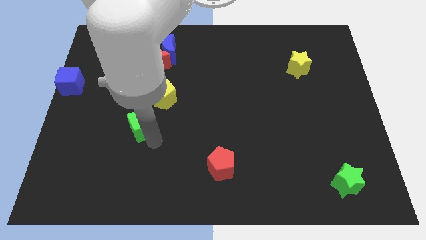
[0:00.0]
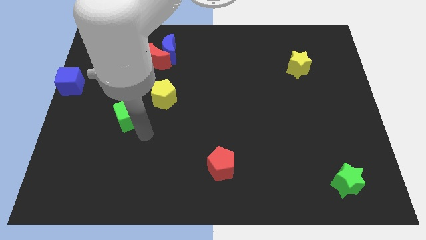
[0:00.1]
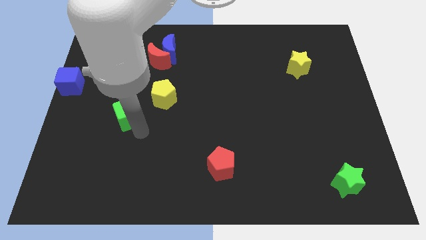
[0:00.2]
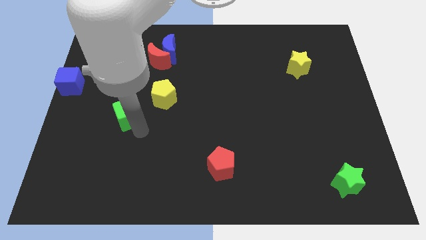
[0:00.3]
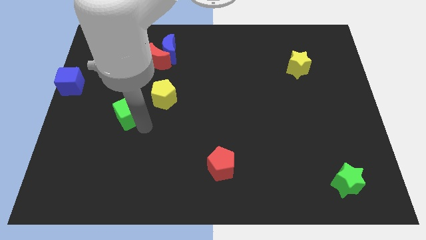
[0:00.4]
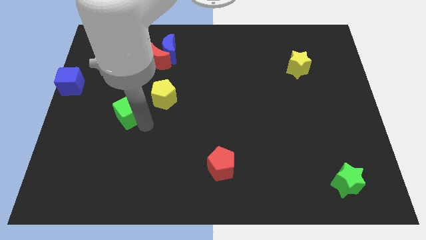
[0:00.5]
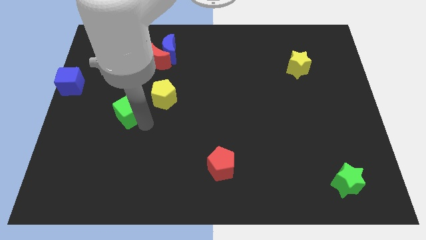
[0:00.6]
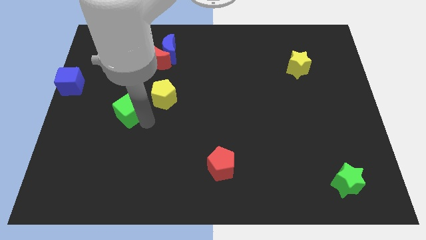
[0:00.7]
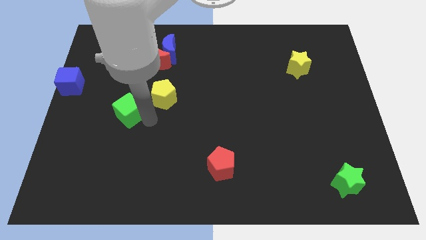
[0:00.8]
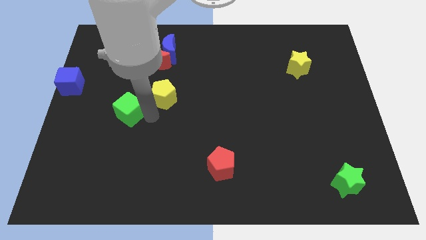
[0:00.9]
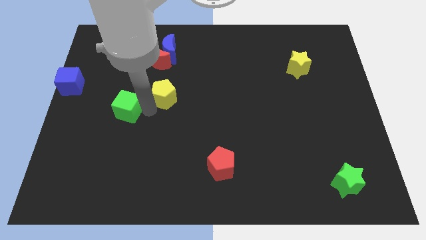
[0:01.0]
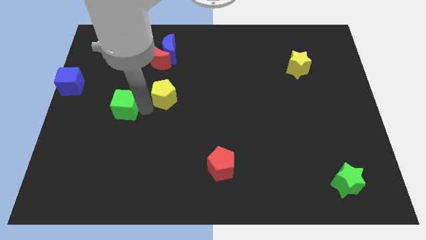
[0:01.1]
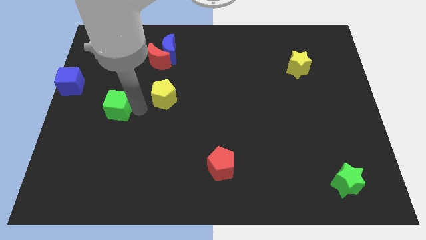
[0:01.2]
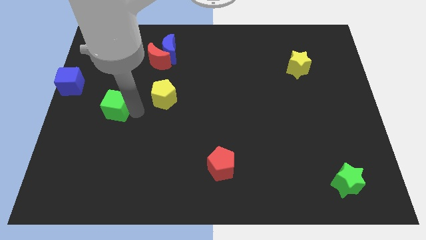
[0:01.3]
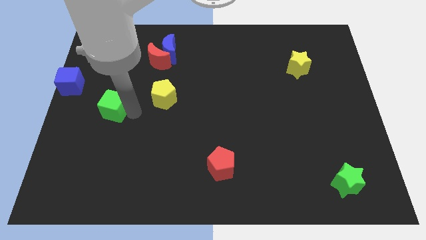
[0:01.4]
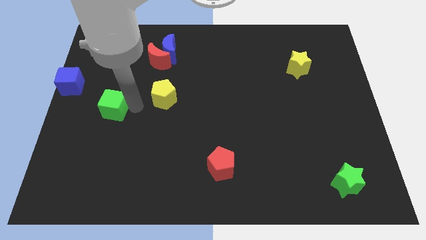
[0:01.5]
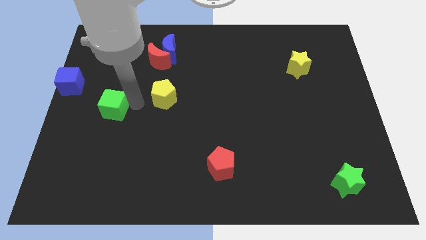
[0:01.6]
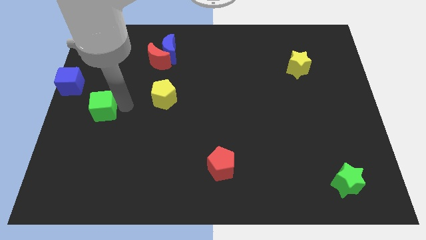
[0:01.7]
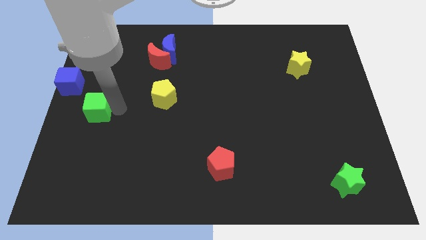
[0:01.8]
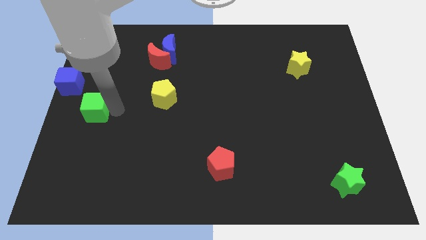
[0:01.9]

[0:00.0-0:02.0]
move green cube towards left

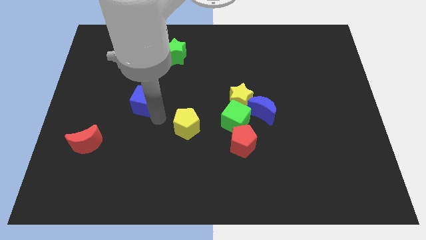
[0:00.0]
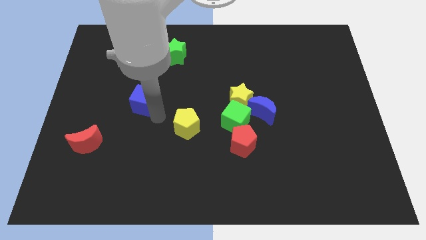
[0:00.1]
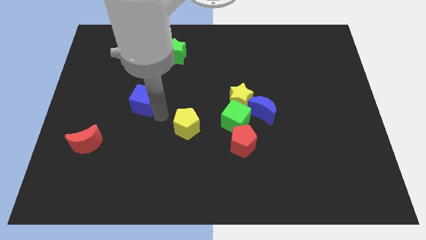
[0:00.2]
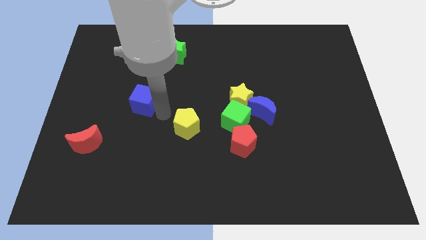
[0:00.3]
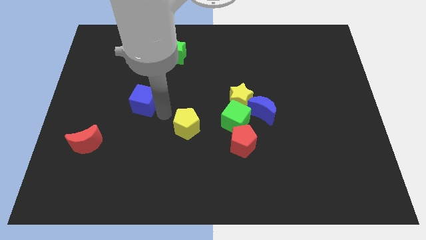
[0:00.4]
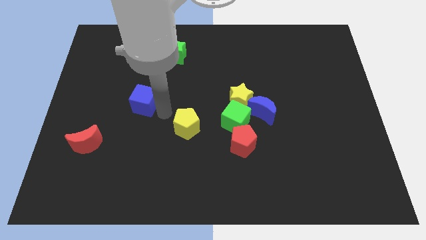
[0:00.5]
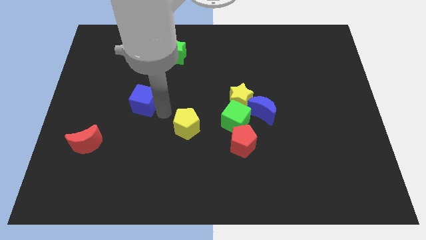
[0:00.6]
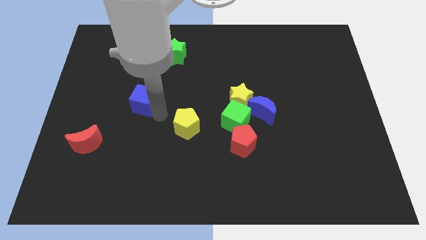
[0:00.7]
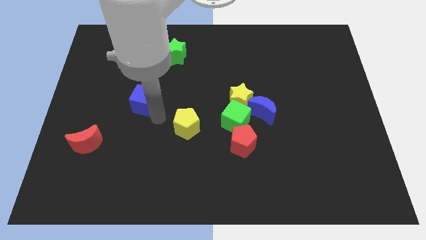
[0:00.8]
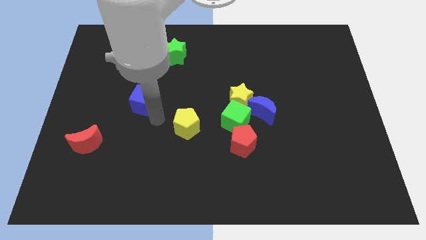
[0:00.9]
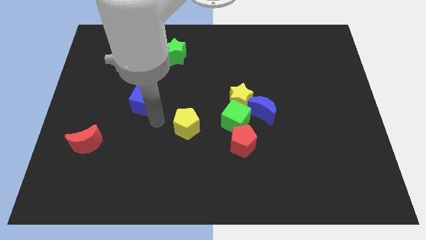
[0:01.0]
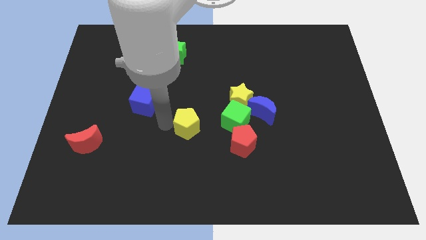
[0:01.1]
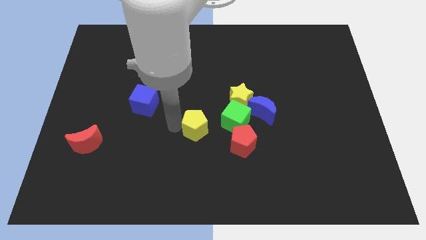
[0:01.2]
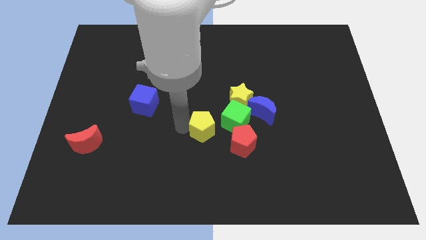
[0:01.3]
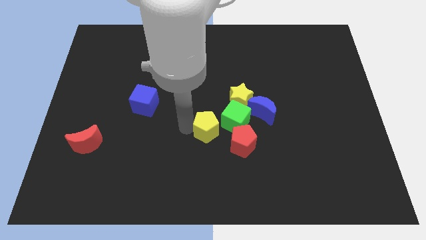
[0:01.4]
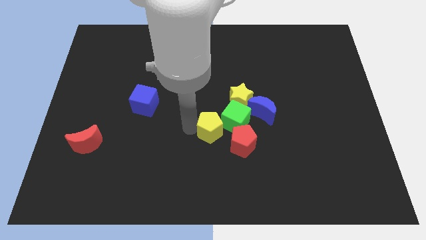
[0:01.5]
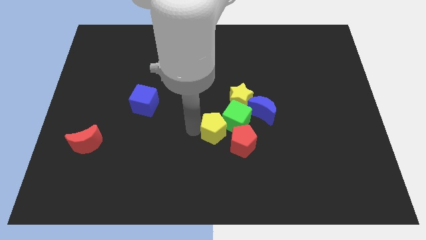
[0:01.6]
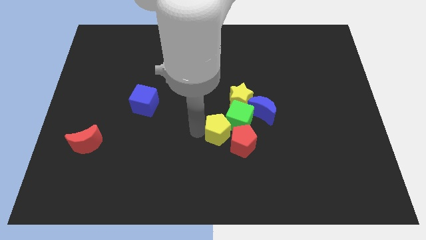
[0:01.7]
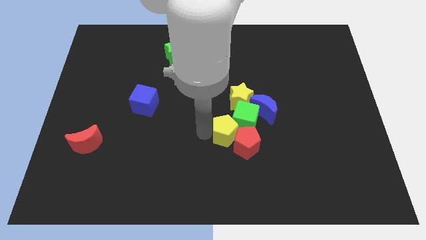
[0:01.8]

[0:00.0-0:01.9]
push the yellow pentagon into the green cube

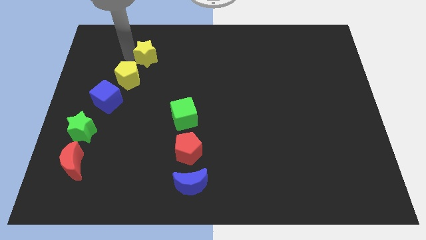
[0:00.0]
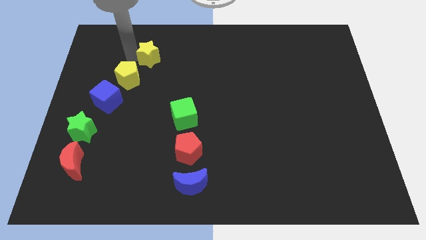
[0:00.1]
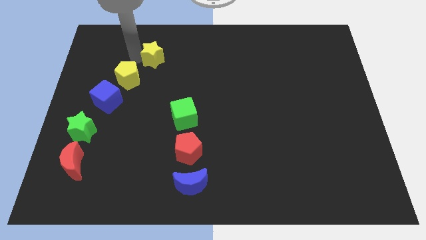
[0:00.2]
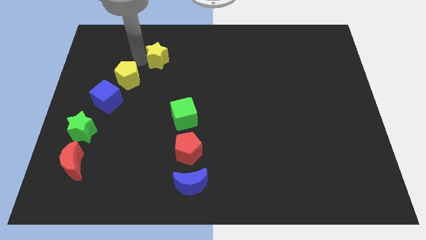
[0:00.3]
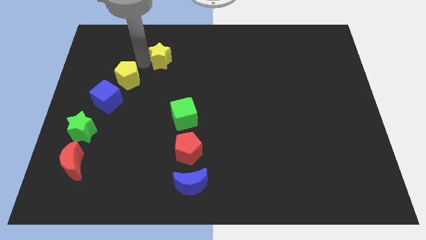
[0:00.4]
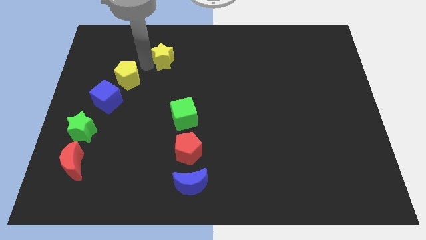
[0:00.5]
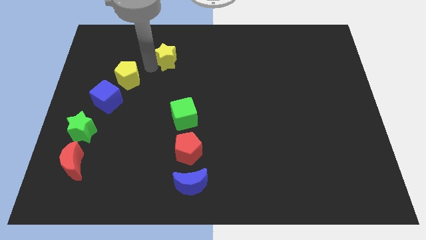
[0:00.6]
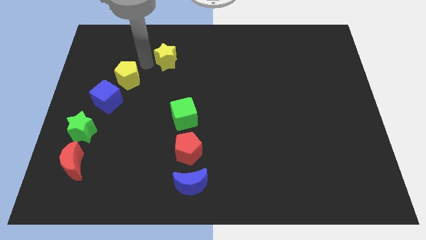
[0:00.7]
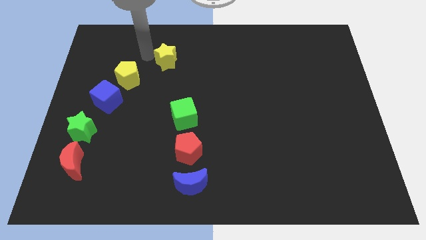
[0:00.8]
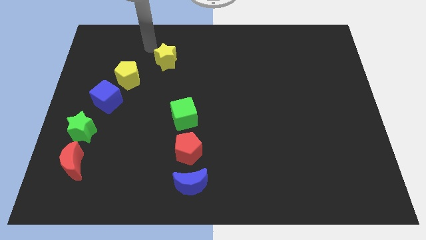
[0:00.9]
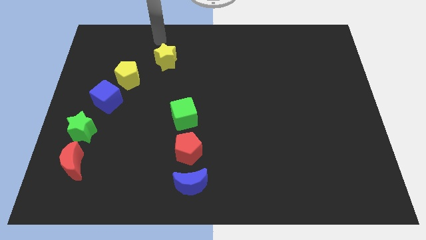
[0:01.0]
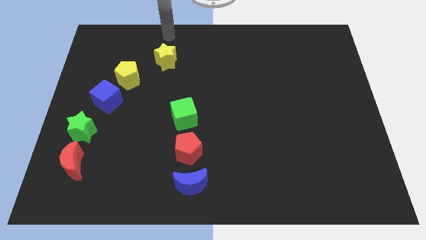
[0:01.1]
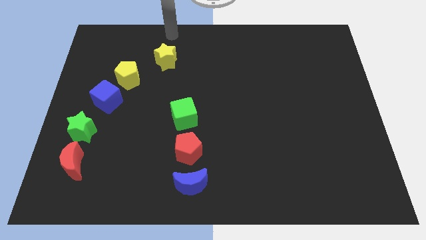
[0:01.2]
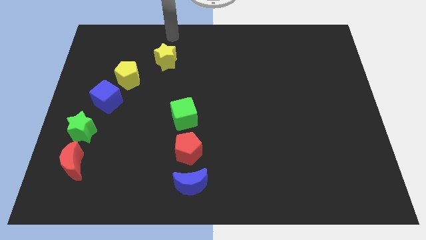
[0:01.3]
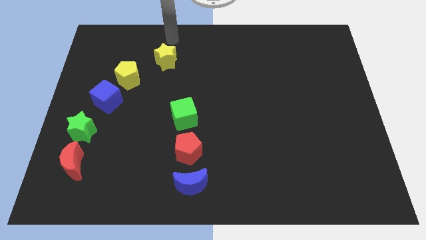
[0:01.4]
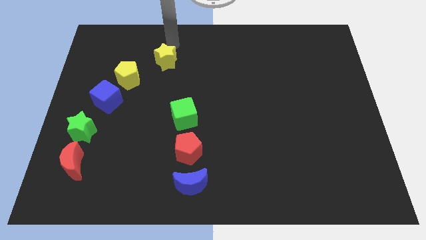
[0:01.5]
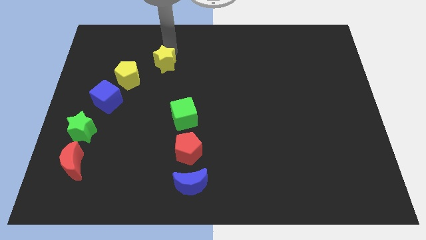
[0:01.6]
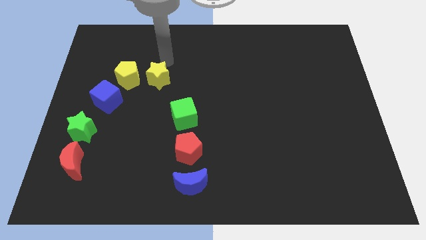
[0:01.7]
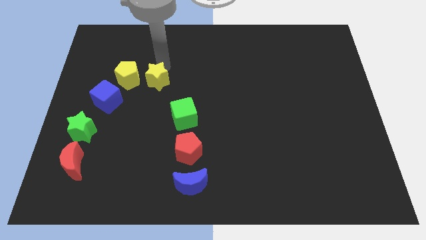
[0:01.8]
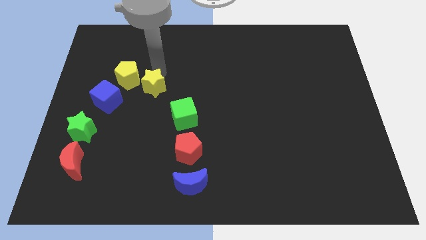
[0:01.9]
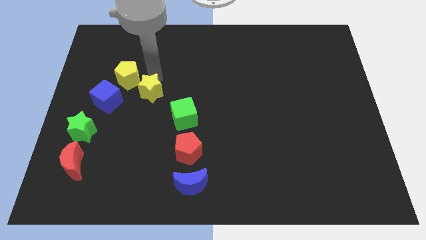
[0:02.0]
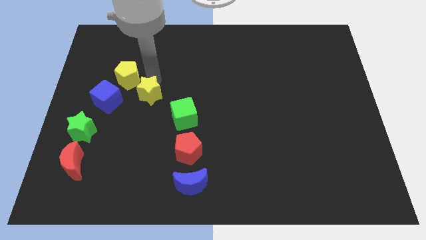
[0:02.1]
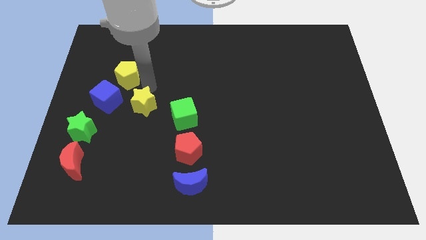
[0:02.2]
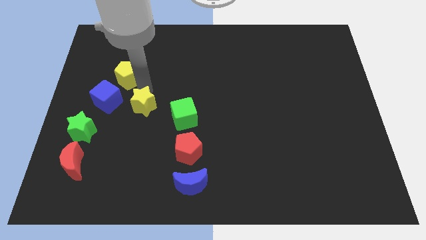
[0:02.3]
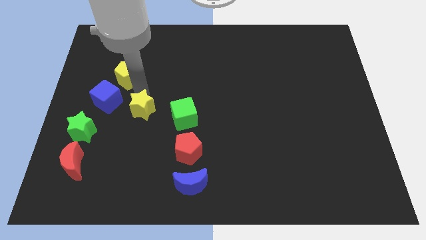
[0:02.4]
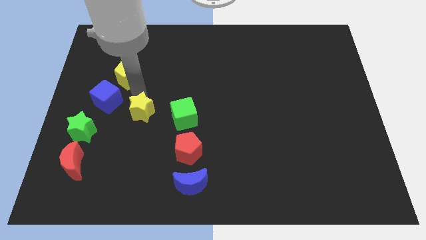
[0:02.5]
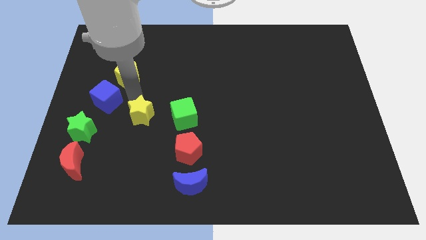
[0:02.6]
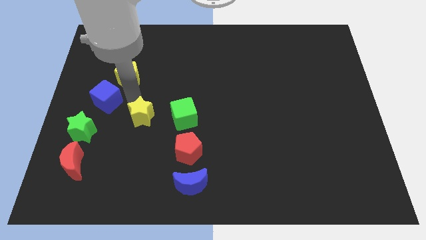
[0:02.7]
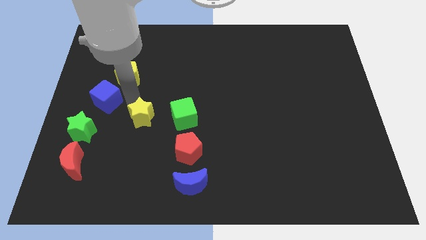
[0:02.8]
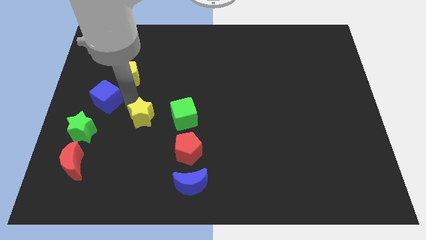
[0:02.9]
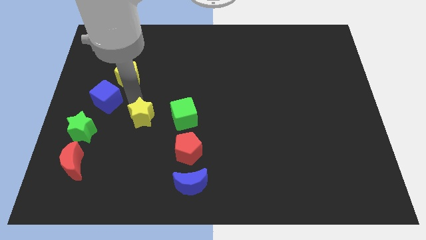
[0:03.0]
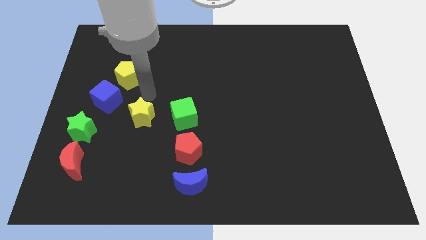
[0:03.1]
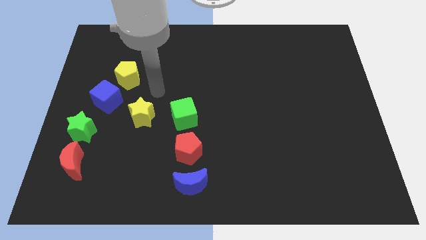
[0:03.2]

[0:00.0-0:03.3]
place the yellow star to the left side of green cube

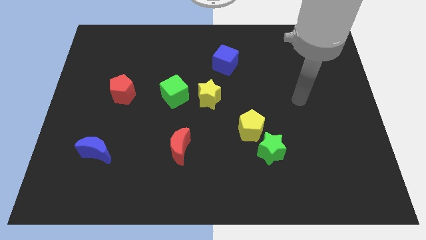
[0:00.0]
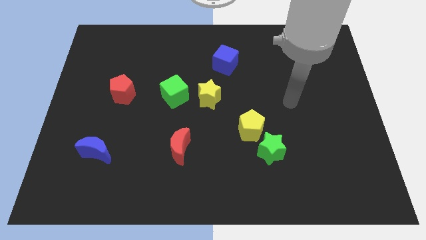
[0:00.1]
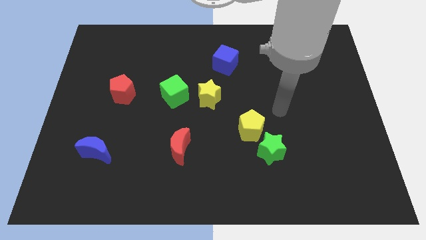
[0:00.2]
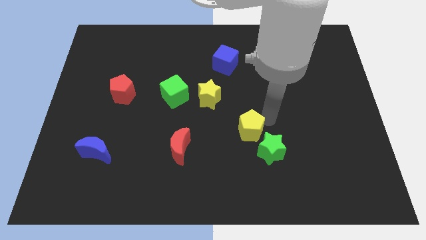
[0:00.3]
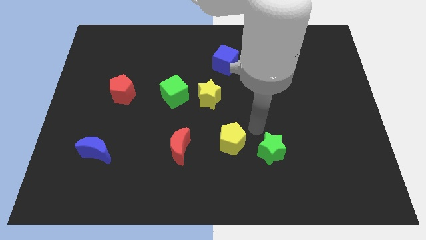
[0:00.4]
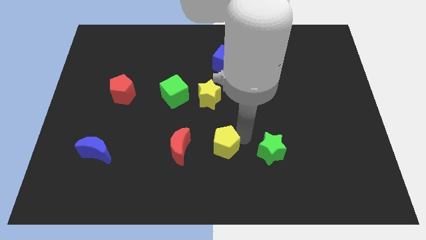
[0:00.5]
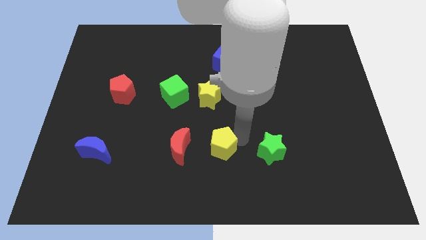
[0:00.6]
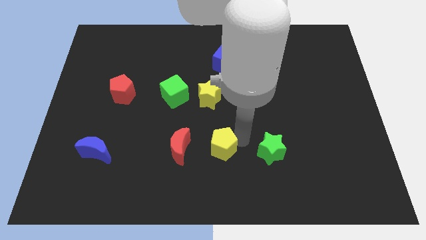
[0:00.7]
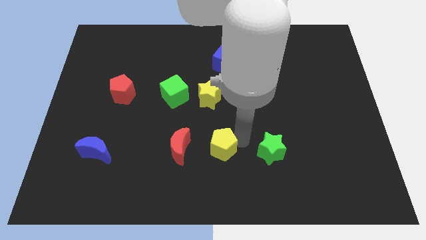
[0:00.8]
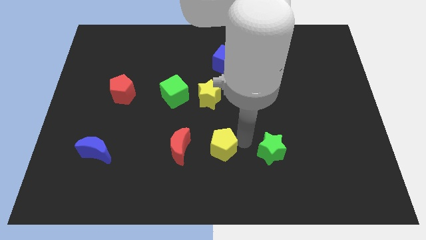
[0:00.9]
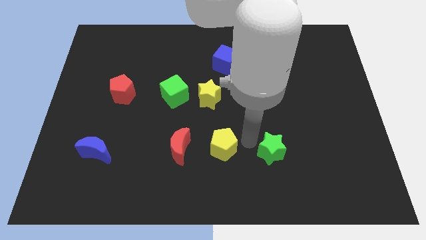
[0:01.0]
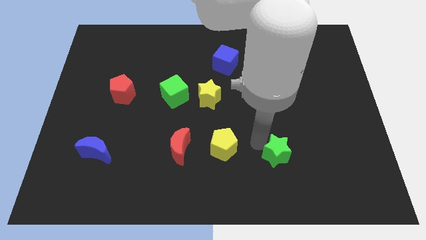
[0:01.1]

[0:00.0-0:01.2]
move the yellow pentagon to the center

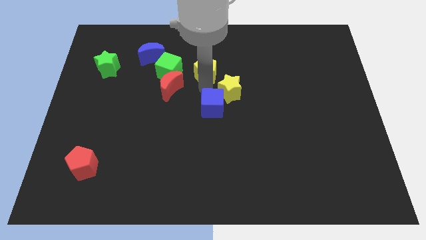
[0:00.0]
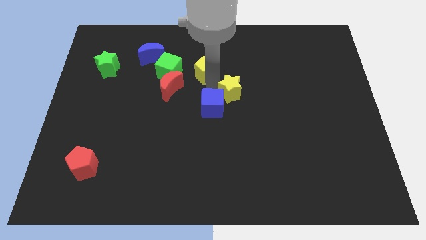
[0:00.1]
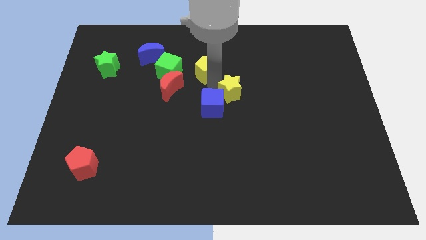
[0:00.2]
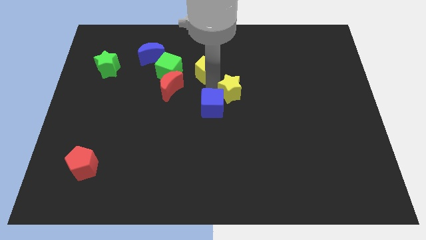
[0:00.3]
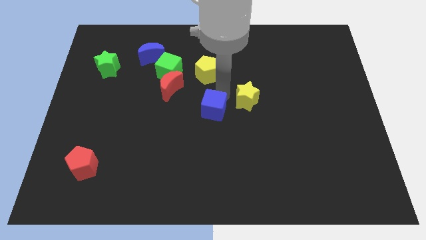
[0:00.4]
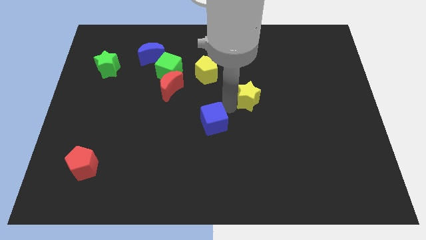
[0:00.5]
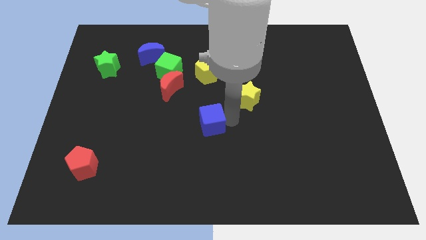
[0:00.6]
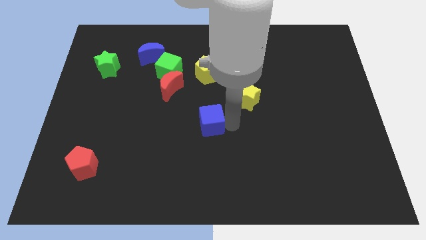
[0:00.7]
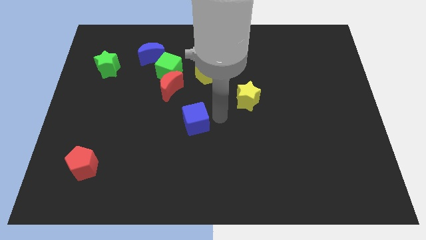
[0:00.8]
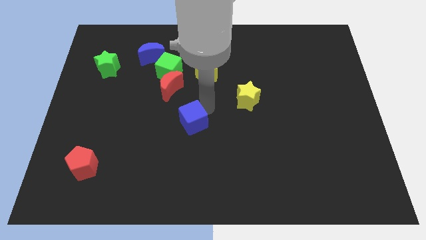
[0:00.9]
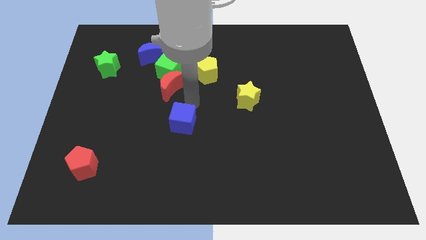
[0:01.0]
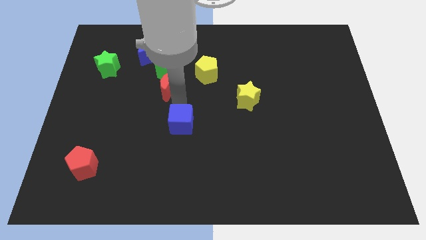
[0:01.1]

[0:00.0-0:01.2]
separate the blue cube and the yellow star
